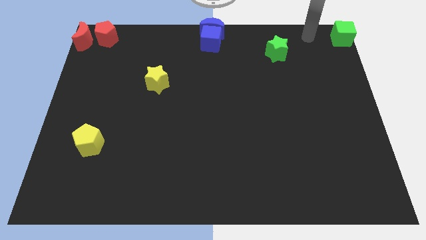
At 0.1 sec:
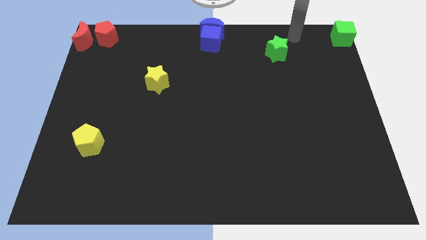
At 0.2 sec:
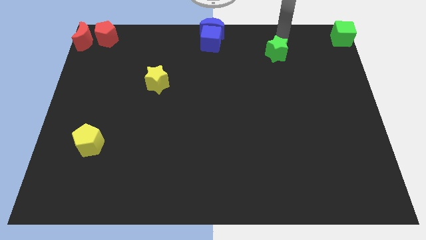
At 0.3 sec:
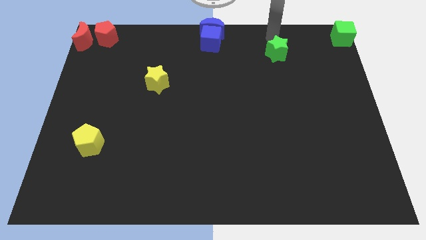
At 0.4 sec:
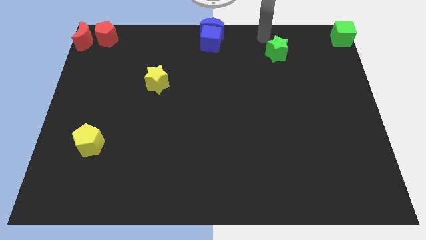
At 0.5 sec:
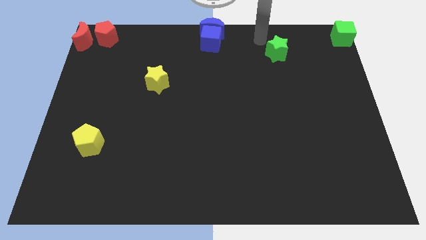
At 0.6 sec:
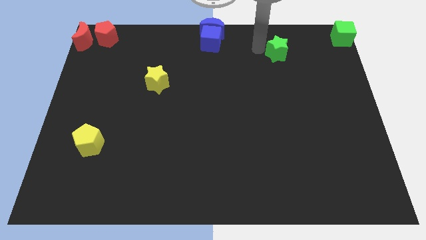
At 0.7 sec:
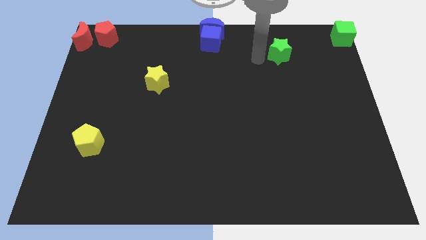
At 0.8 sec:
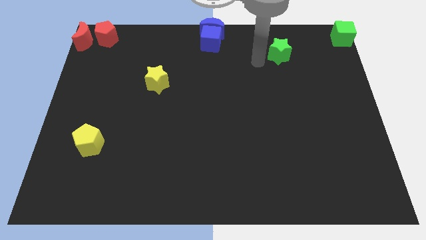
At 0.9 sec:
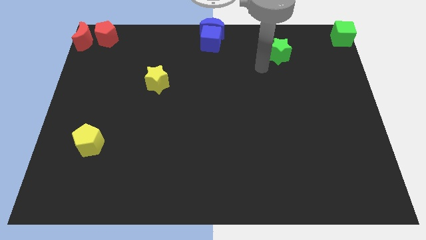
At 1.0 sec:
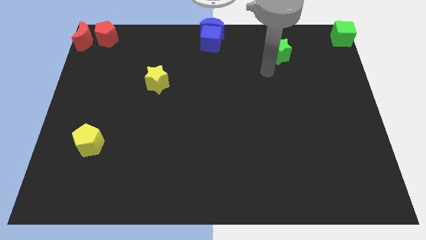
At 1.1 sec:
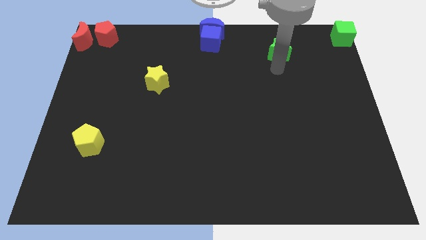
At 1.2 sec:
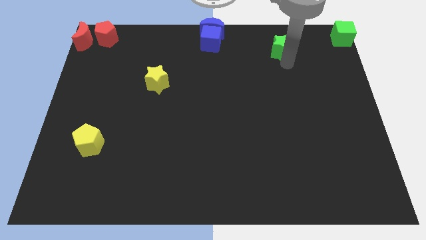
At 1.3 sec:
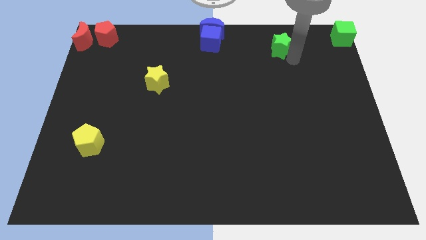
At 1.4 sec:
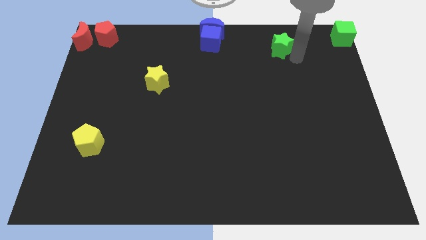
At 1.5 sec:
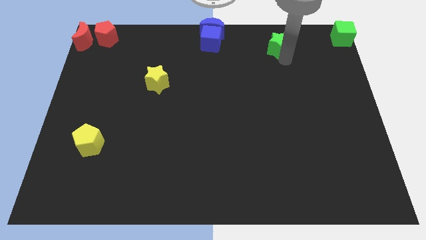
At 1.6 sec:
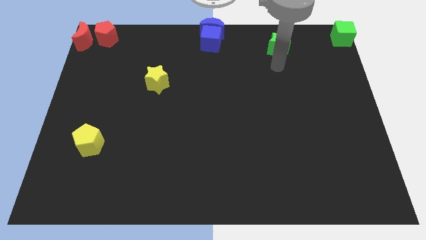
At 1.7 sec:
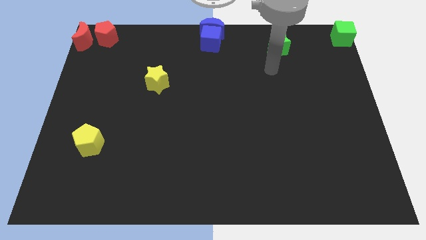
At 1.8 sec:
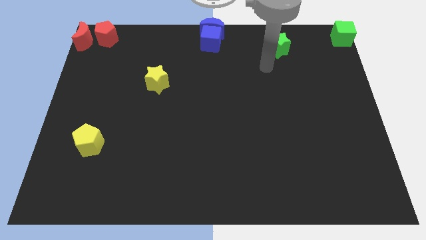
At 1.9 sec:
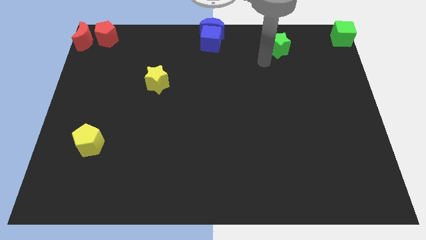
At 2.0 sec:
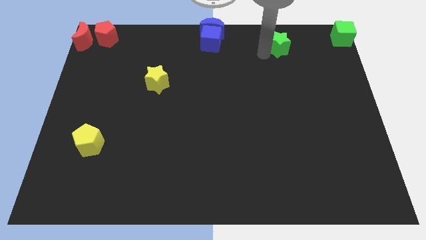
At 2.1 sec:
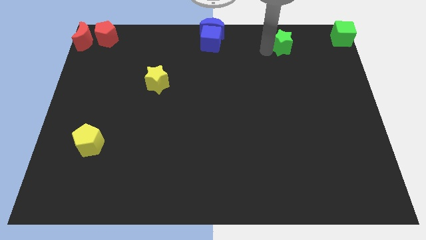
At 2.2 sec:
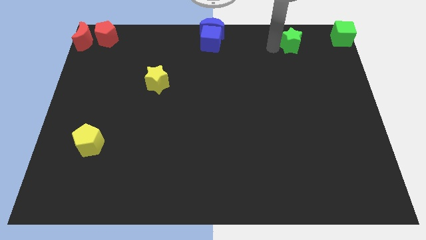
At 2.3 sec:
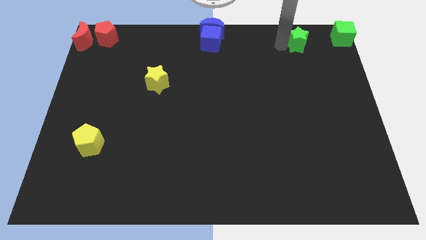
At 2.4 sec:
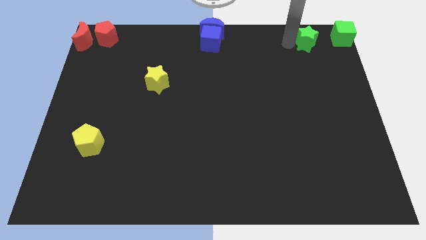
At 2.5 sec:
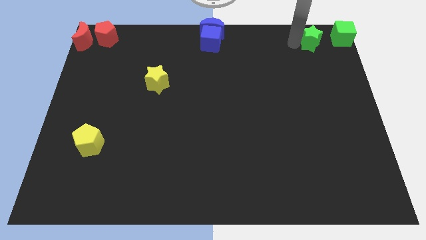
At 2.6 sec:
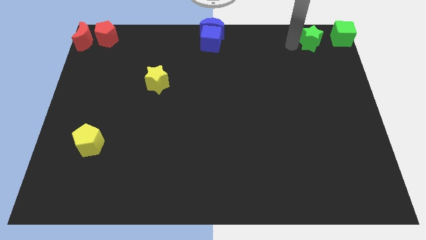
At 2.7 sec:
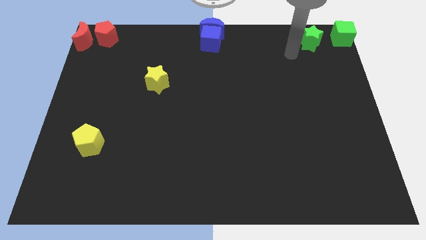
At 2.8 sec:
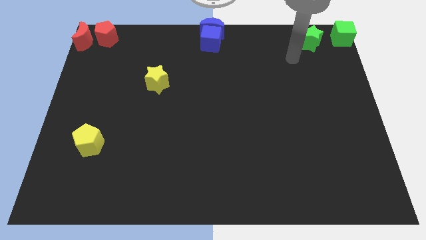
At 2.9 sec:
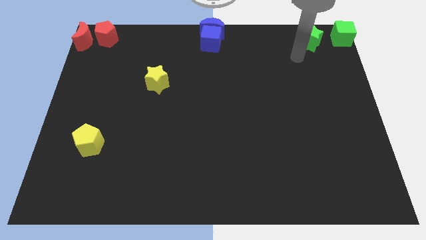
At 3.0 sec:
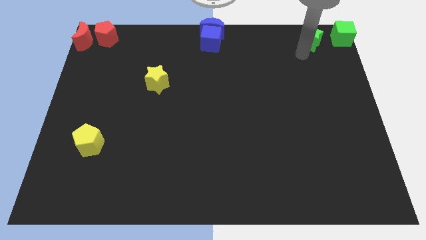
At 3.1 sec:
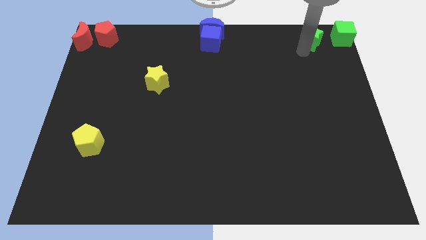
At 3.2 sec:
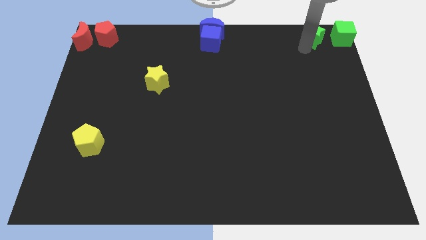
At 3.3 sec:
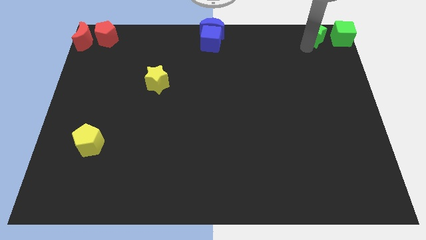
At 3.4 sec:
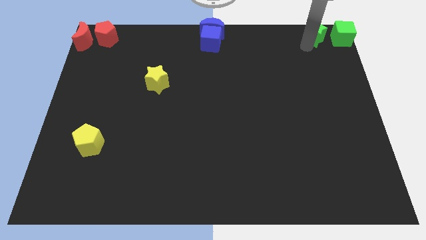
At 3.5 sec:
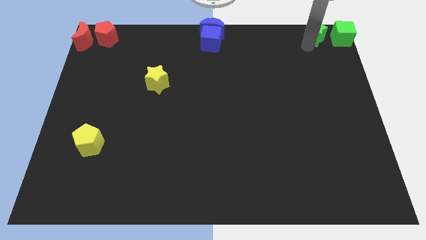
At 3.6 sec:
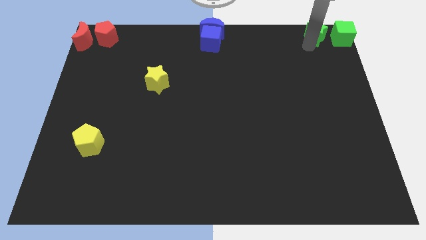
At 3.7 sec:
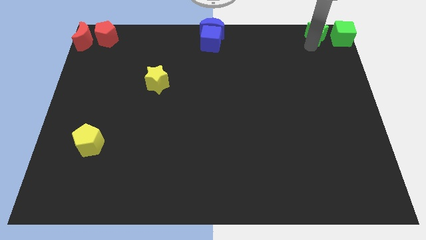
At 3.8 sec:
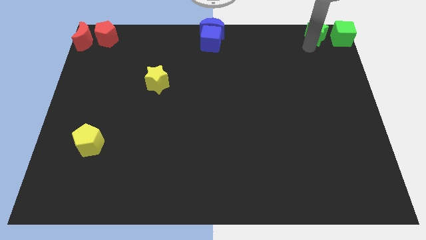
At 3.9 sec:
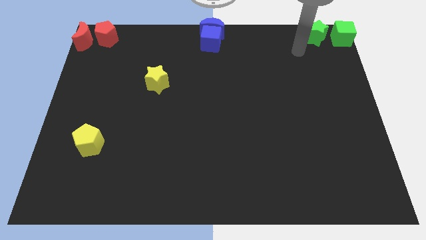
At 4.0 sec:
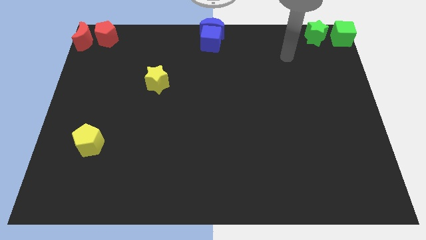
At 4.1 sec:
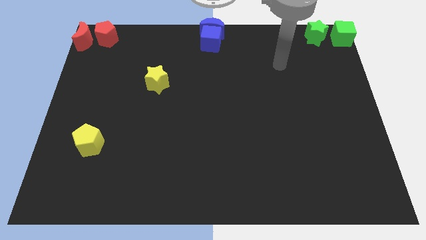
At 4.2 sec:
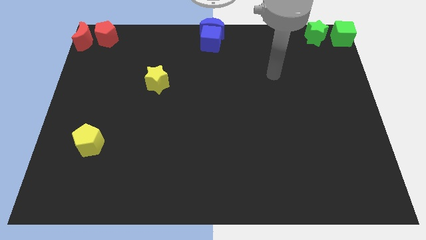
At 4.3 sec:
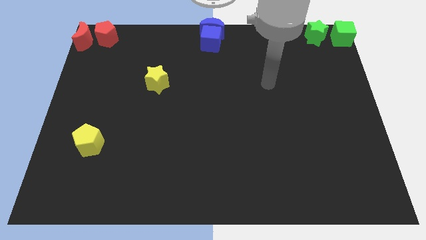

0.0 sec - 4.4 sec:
move the green star to the left of the green cube

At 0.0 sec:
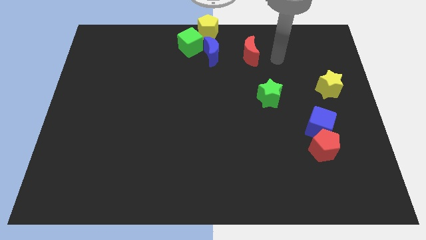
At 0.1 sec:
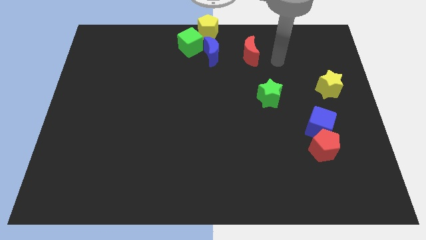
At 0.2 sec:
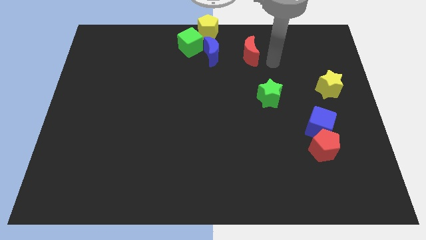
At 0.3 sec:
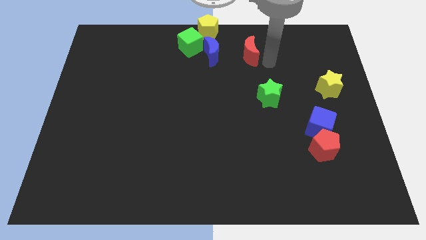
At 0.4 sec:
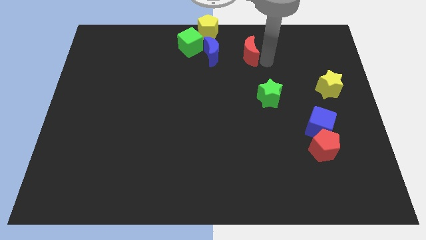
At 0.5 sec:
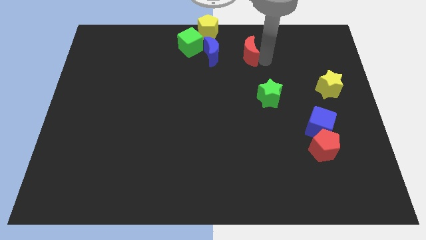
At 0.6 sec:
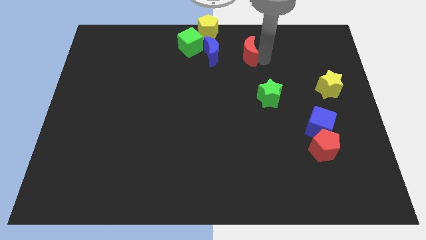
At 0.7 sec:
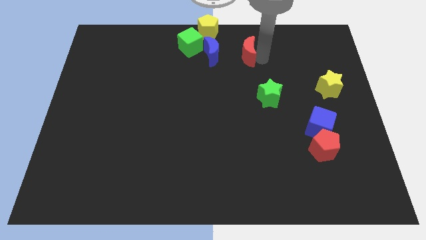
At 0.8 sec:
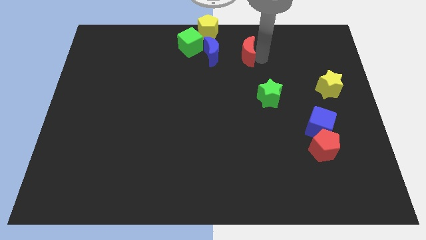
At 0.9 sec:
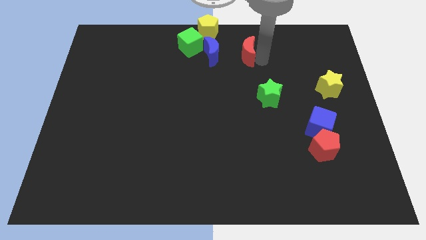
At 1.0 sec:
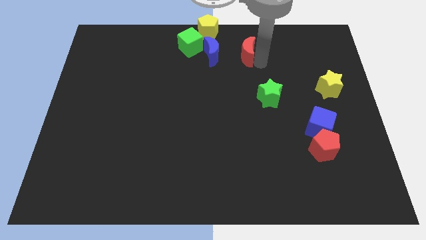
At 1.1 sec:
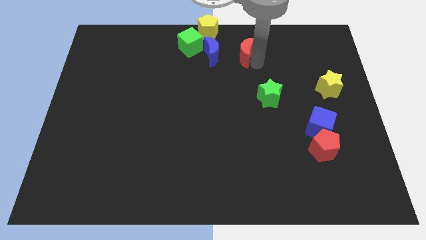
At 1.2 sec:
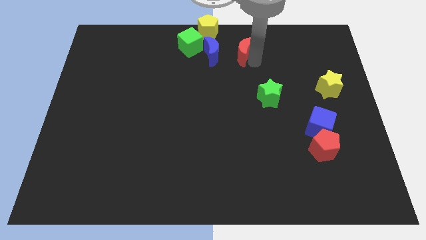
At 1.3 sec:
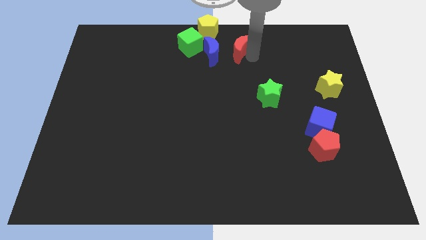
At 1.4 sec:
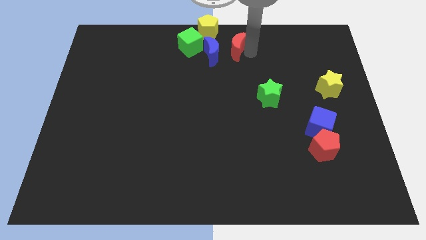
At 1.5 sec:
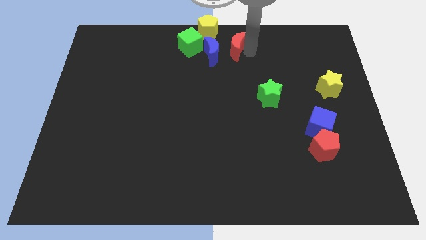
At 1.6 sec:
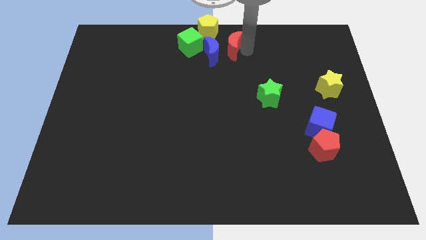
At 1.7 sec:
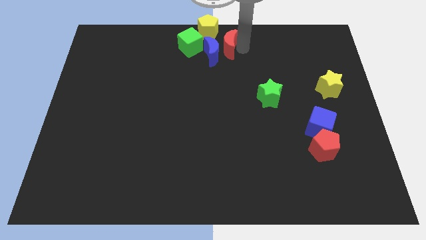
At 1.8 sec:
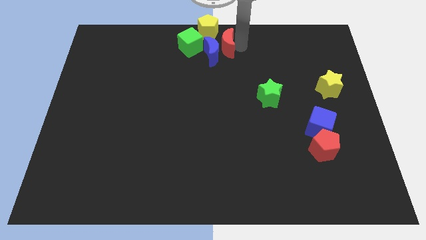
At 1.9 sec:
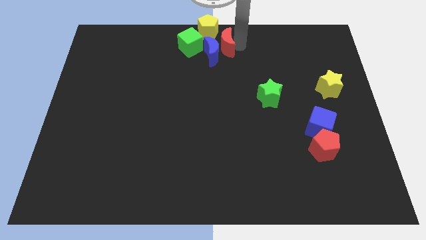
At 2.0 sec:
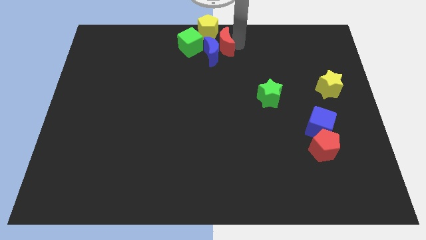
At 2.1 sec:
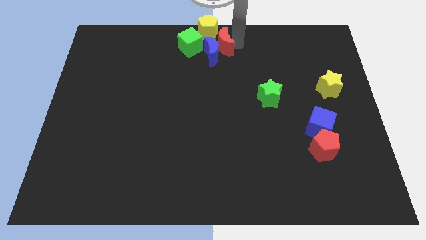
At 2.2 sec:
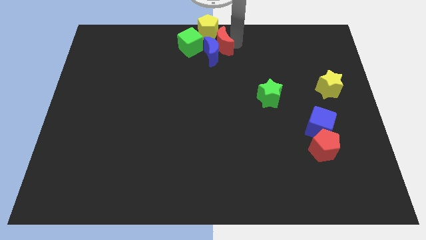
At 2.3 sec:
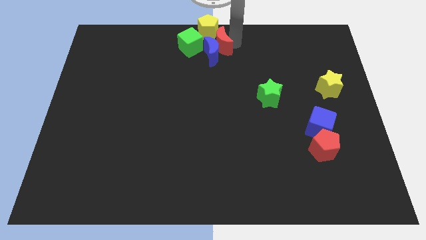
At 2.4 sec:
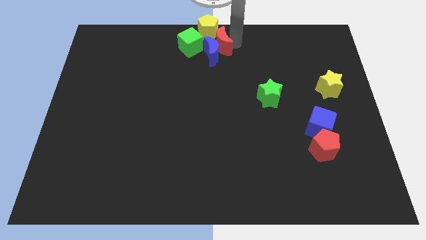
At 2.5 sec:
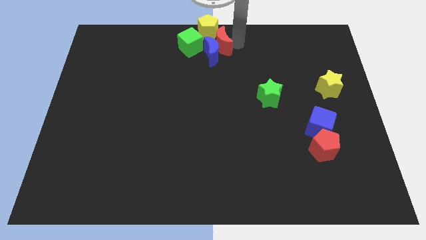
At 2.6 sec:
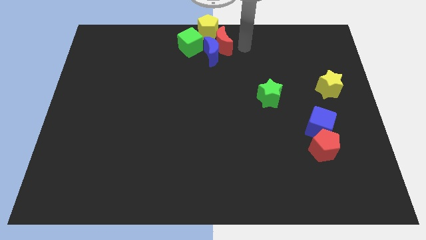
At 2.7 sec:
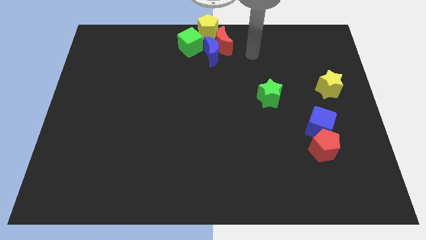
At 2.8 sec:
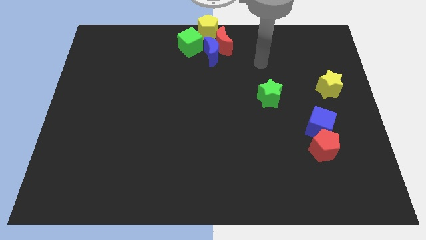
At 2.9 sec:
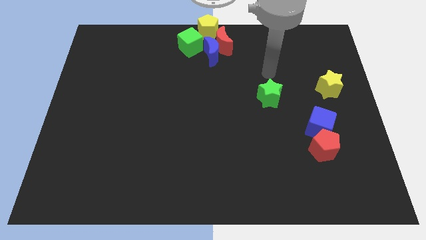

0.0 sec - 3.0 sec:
place the red moon into the group of blocks

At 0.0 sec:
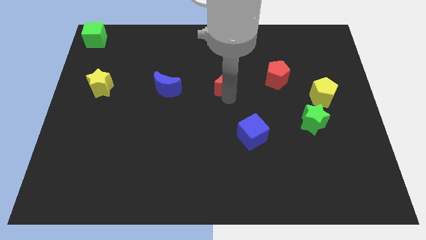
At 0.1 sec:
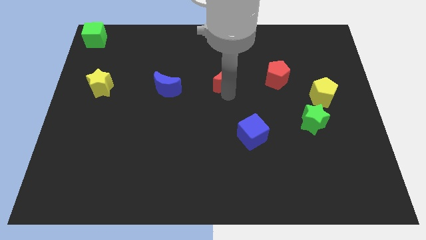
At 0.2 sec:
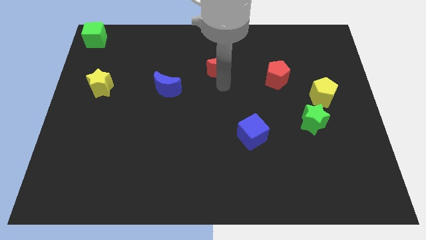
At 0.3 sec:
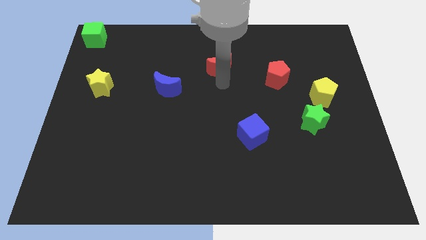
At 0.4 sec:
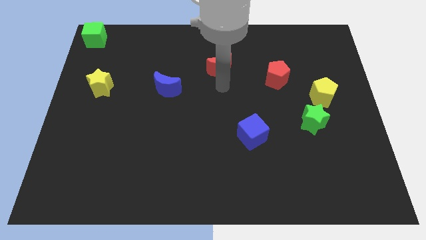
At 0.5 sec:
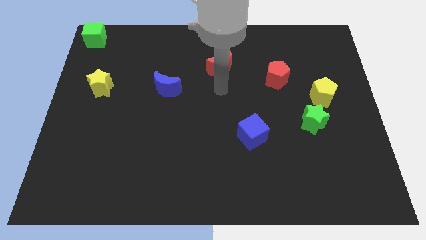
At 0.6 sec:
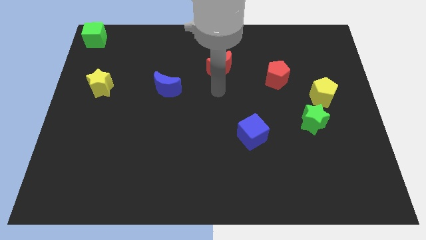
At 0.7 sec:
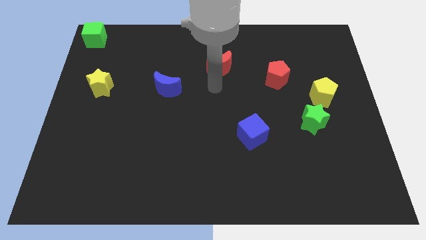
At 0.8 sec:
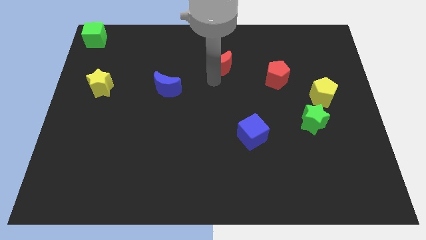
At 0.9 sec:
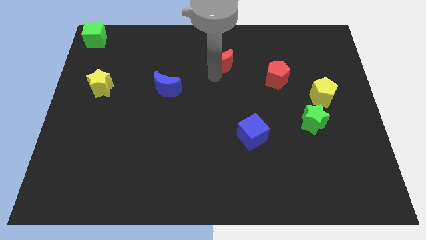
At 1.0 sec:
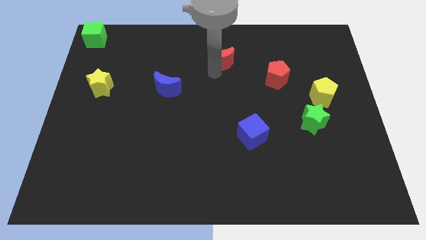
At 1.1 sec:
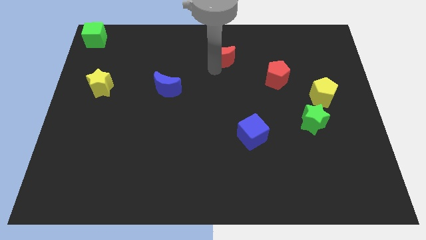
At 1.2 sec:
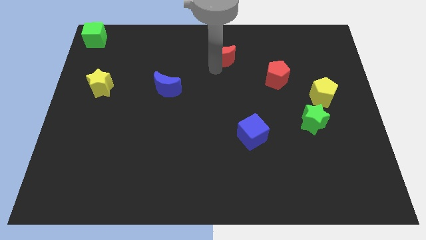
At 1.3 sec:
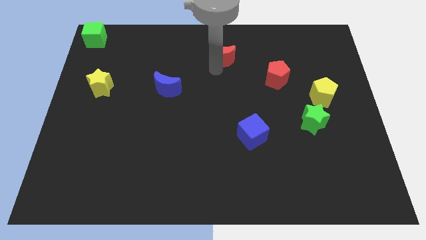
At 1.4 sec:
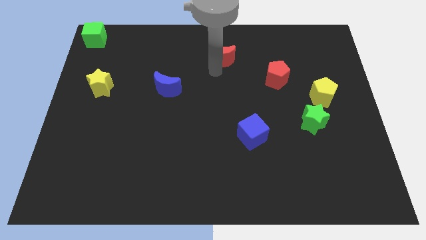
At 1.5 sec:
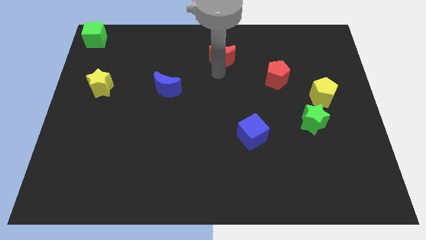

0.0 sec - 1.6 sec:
slide the red crescent slightly upwards
